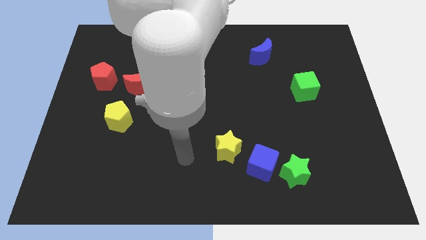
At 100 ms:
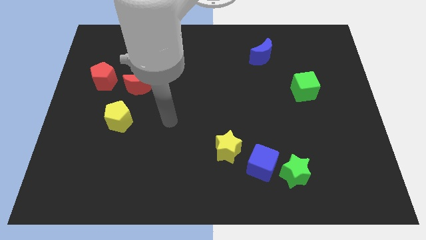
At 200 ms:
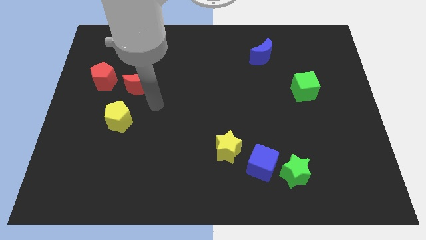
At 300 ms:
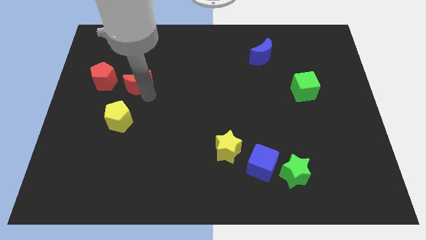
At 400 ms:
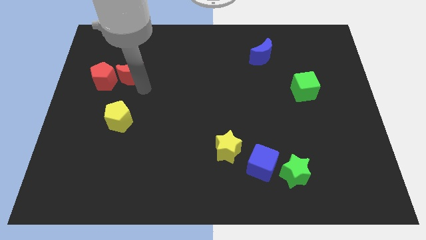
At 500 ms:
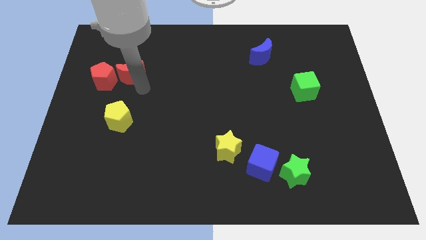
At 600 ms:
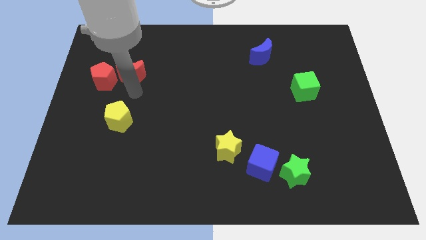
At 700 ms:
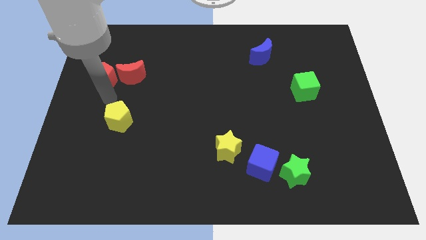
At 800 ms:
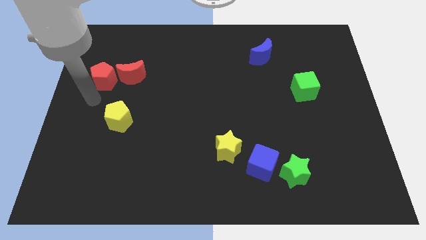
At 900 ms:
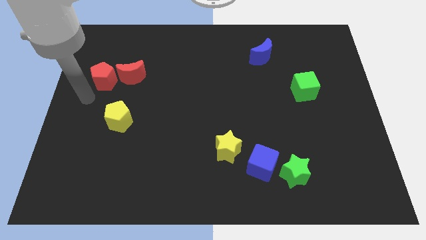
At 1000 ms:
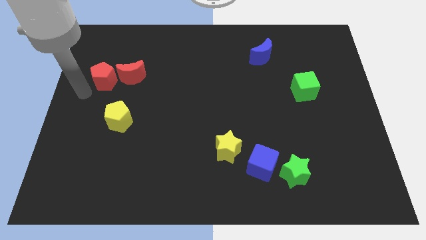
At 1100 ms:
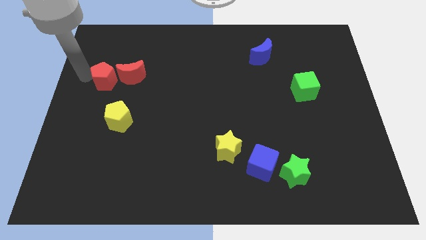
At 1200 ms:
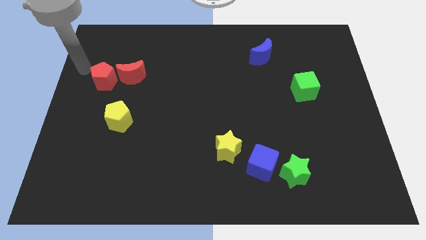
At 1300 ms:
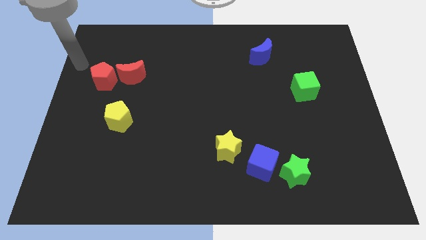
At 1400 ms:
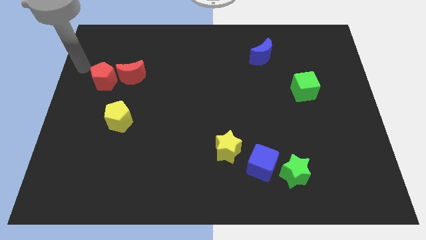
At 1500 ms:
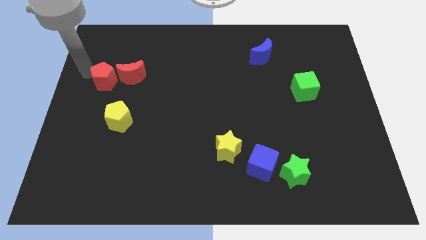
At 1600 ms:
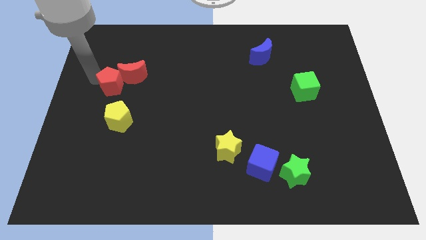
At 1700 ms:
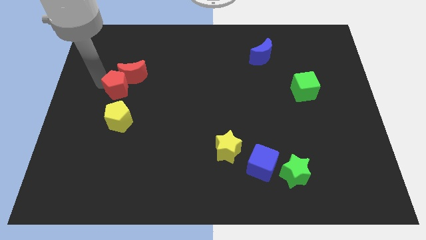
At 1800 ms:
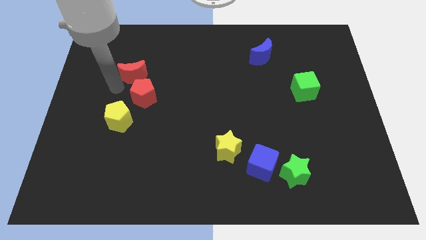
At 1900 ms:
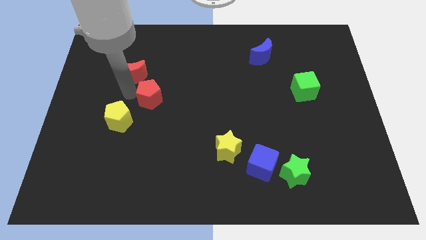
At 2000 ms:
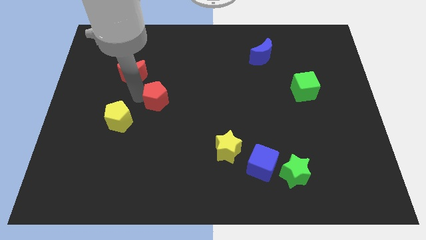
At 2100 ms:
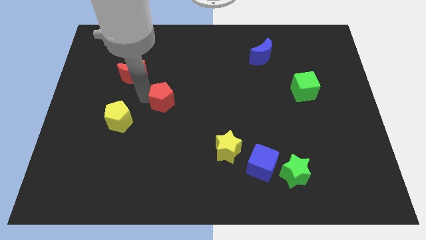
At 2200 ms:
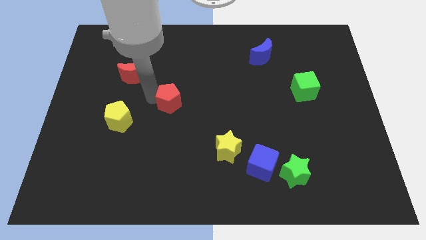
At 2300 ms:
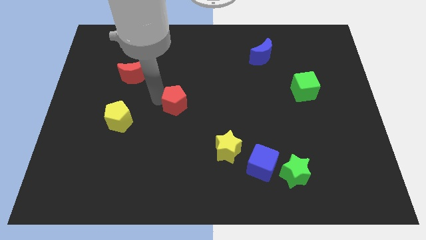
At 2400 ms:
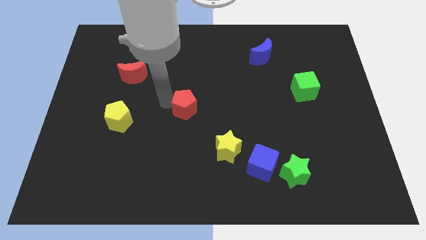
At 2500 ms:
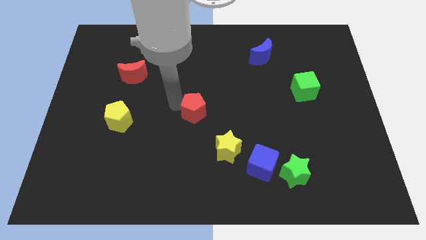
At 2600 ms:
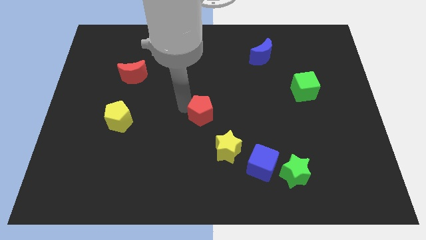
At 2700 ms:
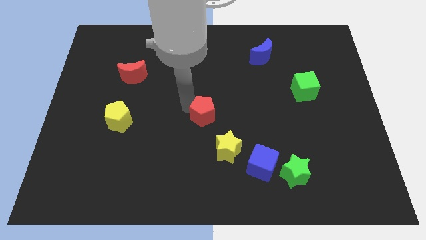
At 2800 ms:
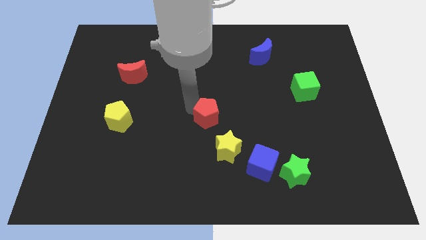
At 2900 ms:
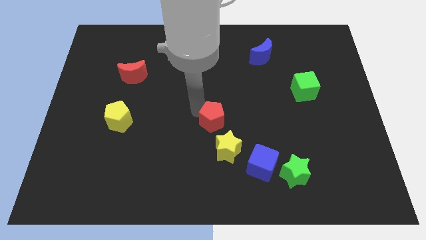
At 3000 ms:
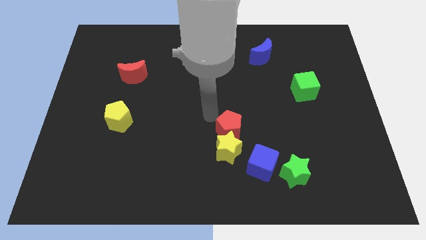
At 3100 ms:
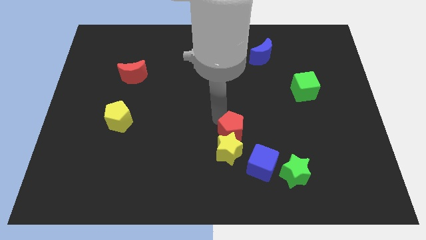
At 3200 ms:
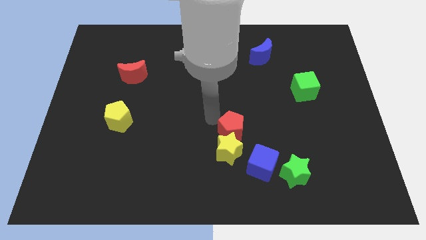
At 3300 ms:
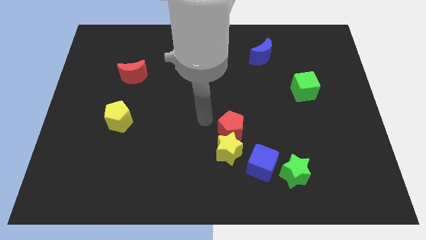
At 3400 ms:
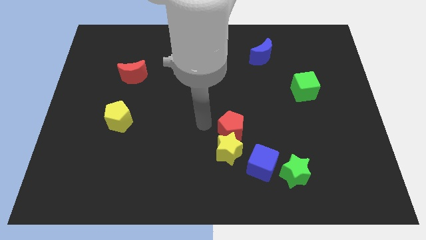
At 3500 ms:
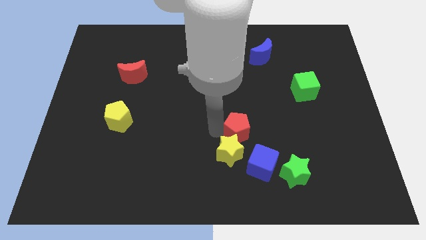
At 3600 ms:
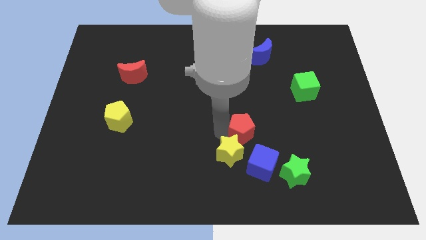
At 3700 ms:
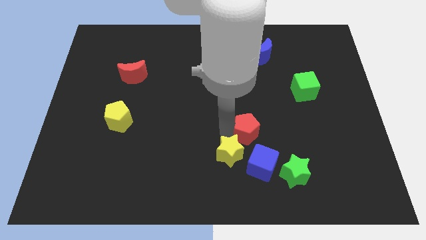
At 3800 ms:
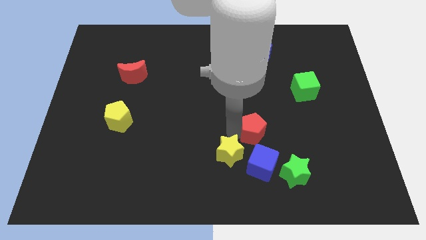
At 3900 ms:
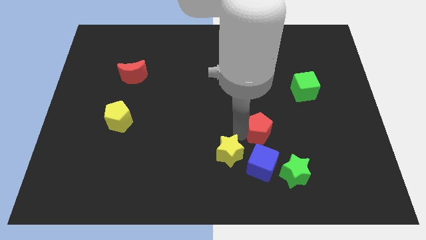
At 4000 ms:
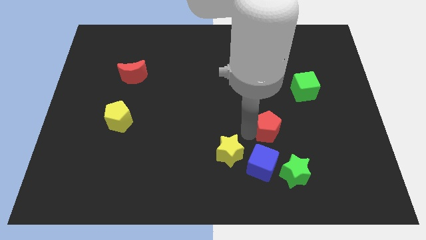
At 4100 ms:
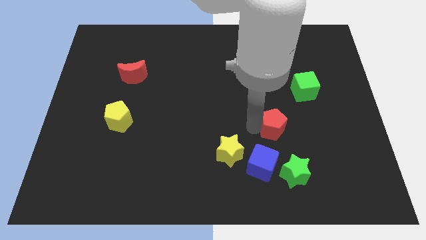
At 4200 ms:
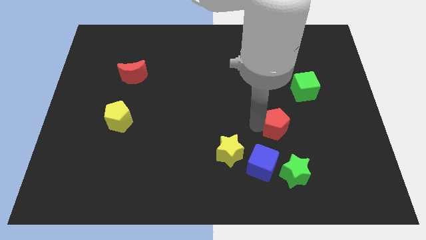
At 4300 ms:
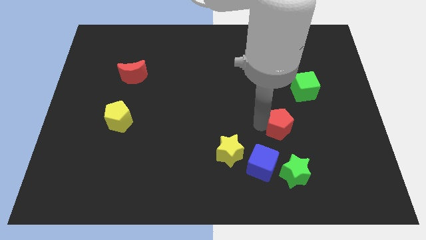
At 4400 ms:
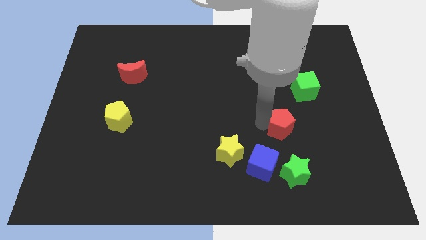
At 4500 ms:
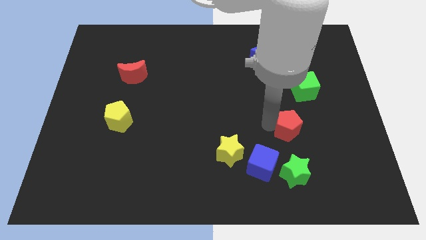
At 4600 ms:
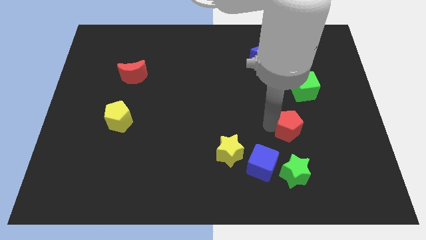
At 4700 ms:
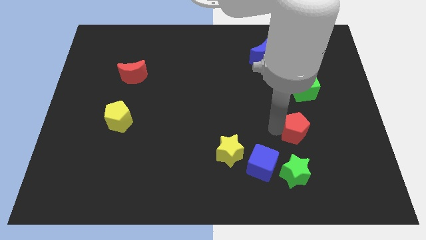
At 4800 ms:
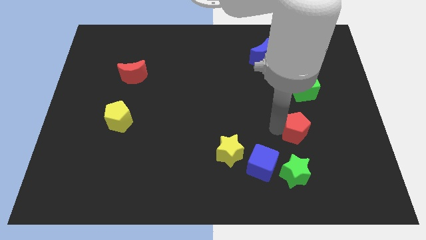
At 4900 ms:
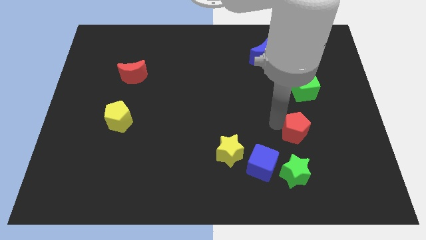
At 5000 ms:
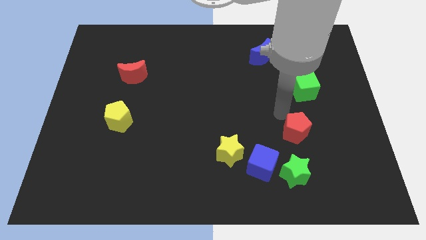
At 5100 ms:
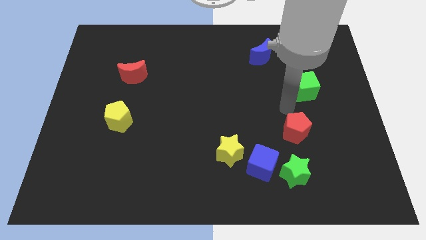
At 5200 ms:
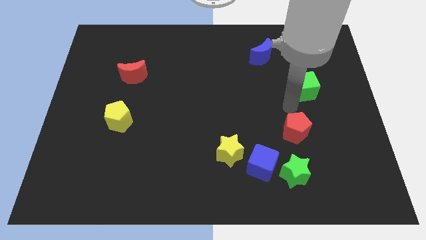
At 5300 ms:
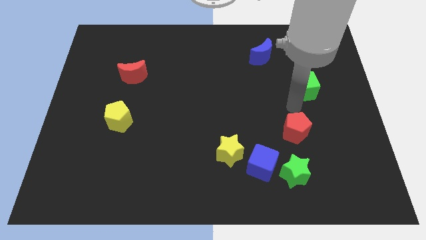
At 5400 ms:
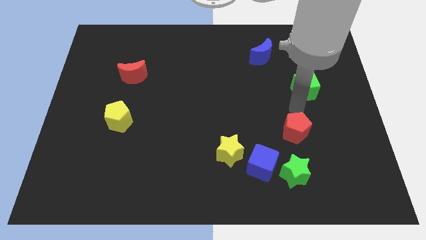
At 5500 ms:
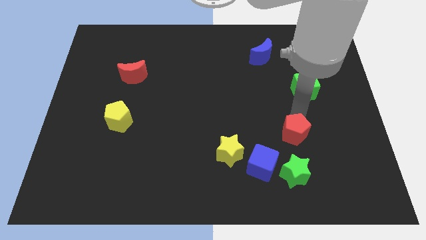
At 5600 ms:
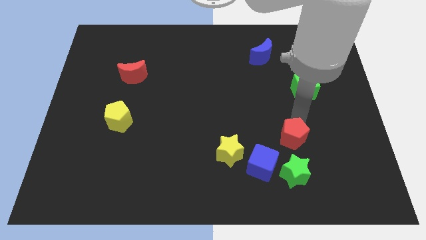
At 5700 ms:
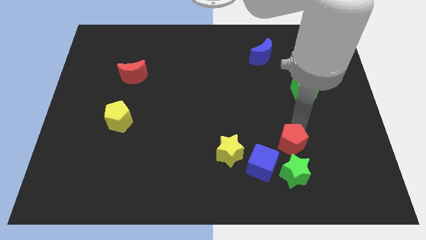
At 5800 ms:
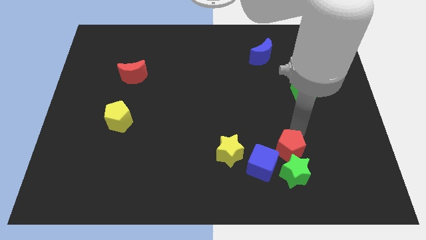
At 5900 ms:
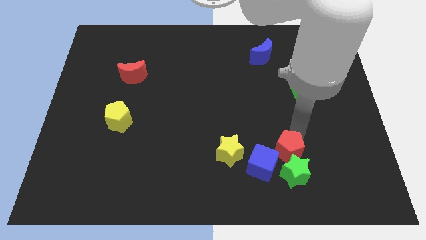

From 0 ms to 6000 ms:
move the red pentagon towards the green star

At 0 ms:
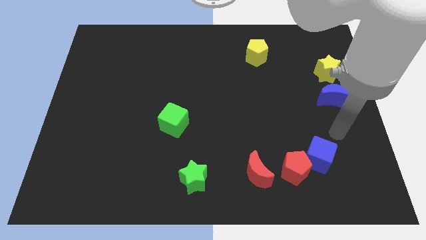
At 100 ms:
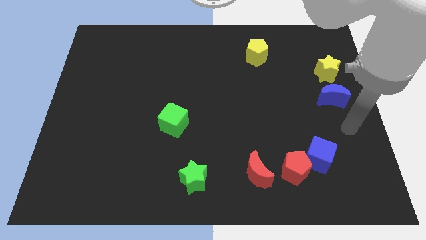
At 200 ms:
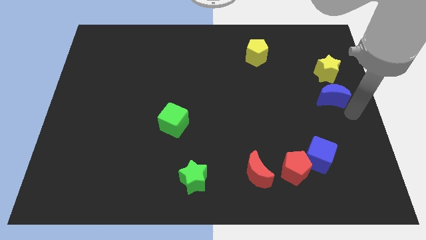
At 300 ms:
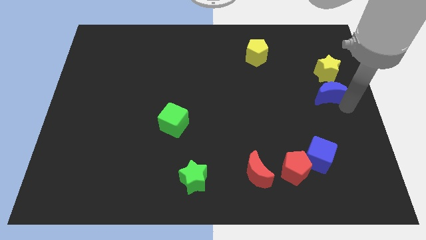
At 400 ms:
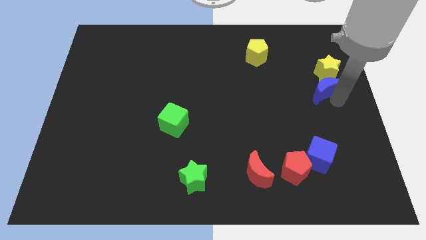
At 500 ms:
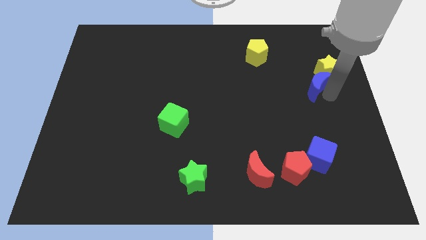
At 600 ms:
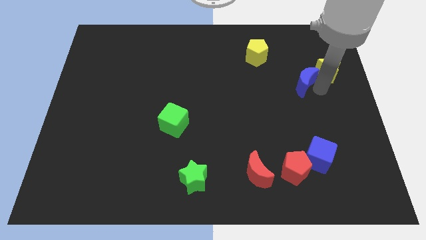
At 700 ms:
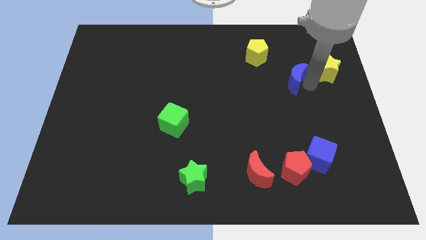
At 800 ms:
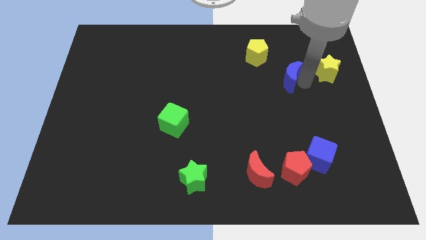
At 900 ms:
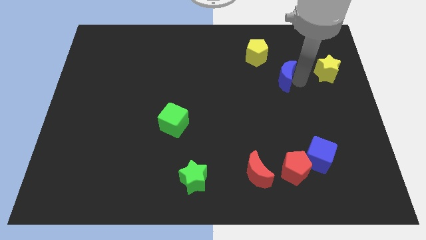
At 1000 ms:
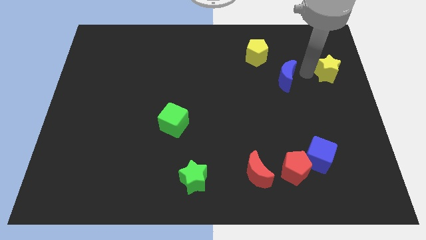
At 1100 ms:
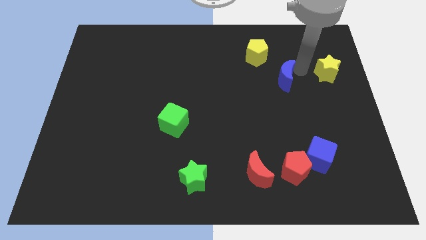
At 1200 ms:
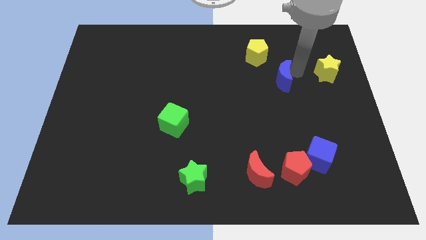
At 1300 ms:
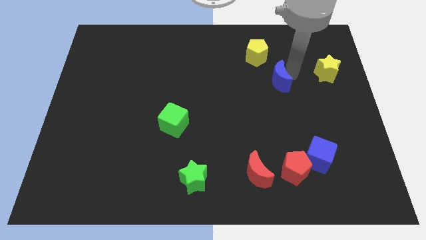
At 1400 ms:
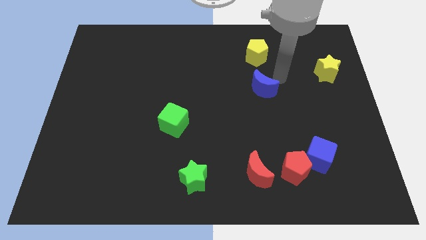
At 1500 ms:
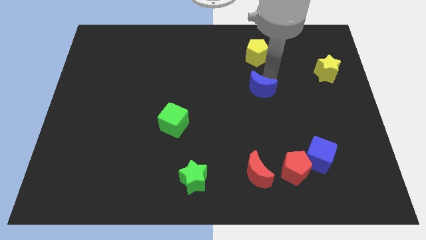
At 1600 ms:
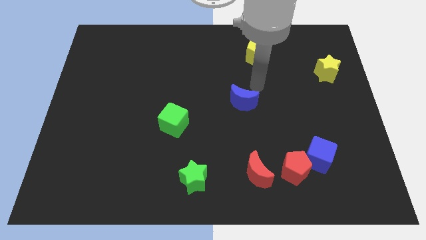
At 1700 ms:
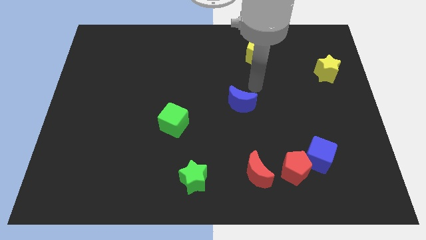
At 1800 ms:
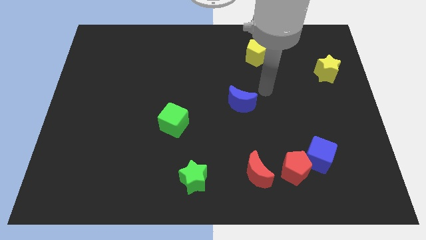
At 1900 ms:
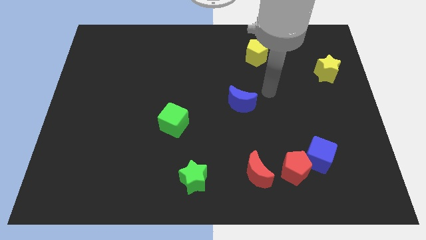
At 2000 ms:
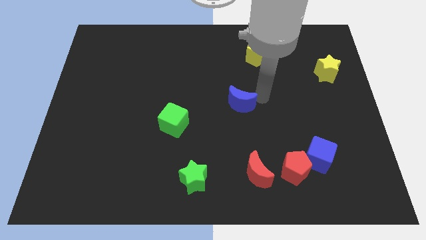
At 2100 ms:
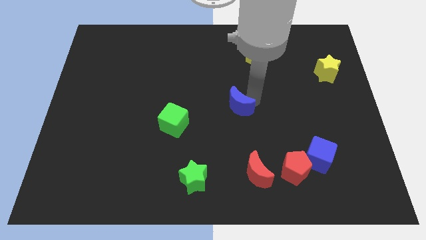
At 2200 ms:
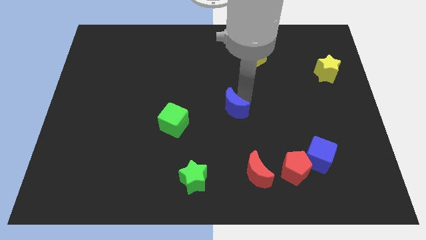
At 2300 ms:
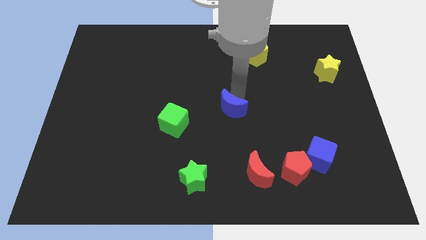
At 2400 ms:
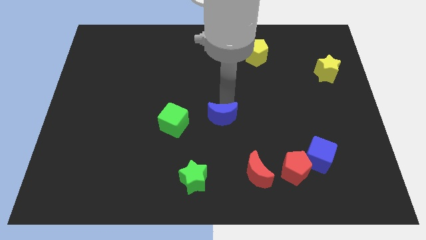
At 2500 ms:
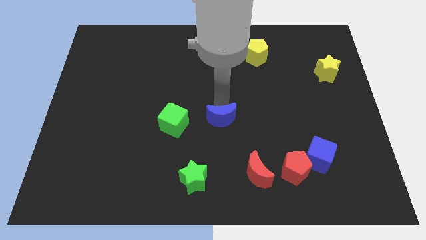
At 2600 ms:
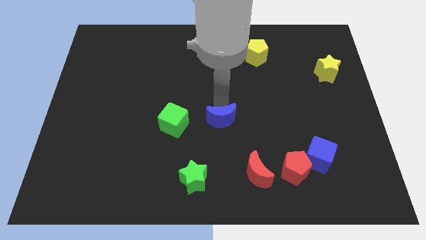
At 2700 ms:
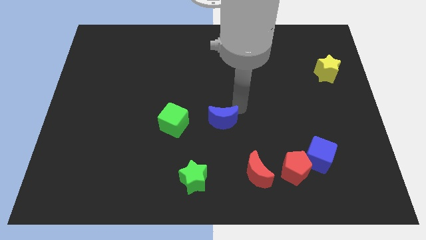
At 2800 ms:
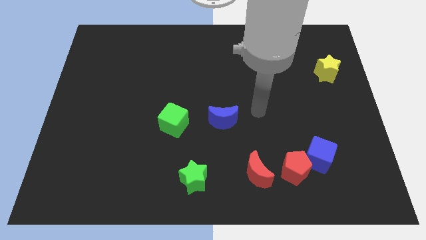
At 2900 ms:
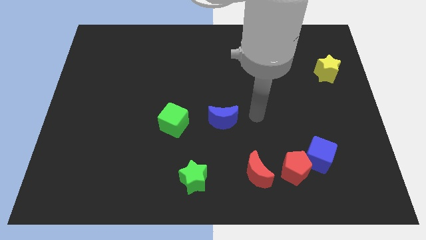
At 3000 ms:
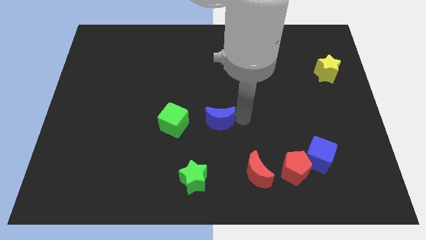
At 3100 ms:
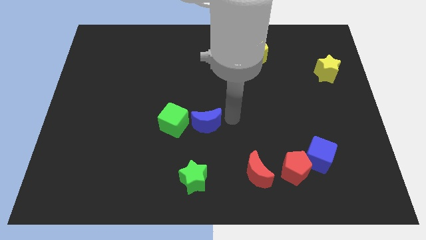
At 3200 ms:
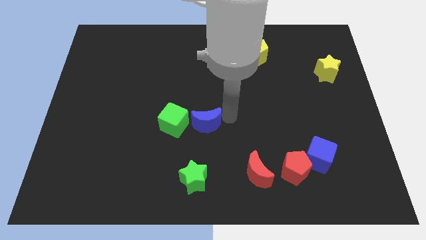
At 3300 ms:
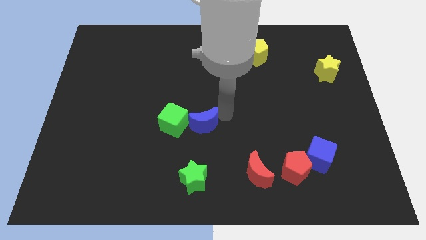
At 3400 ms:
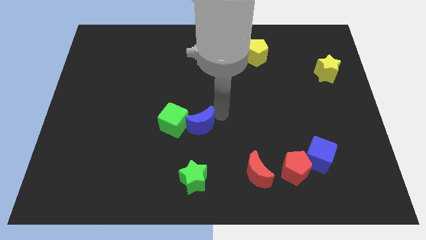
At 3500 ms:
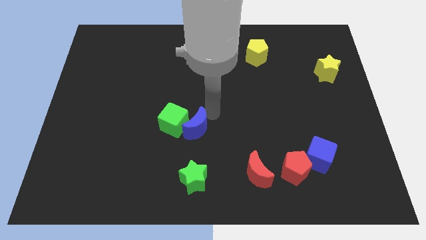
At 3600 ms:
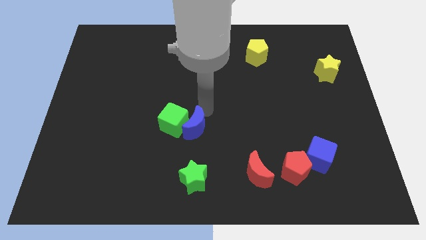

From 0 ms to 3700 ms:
push the blue moon to the green cube
